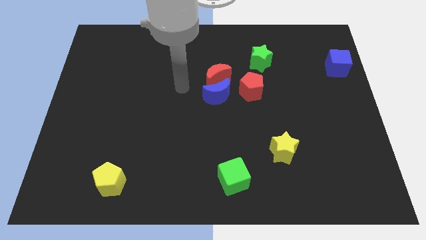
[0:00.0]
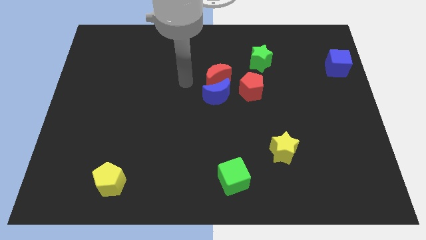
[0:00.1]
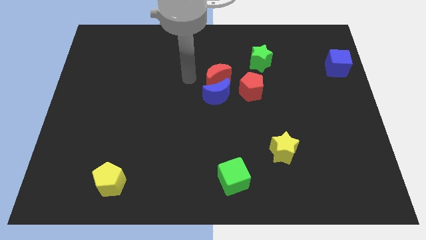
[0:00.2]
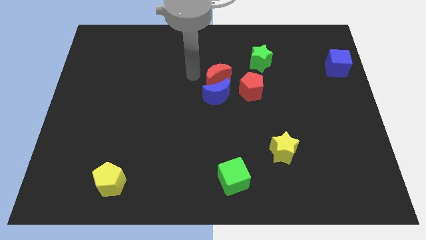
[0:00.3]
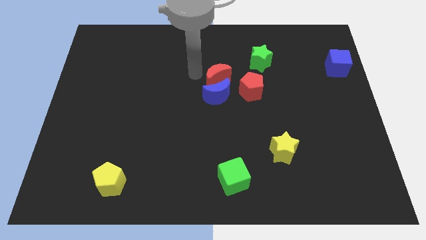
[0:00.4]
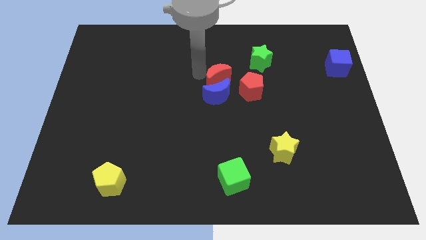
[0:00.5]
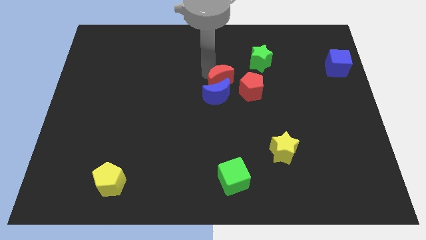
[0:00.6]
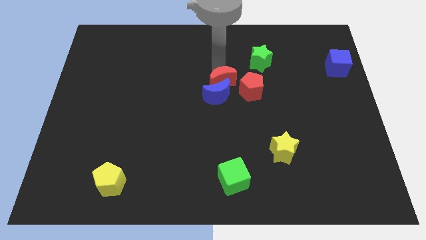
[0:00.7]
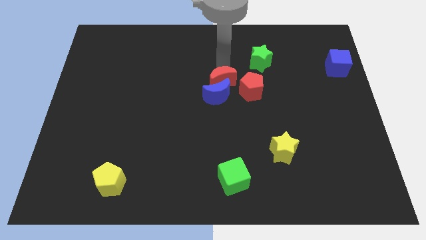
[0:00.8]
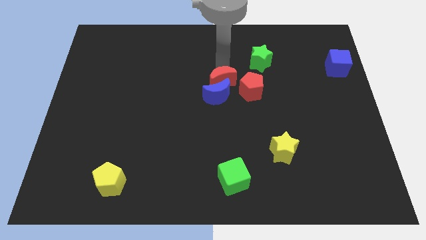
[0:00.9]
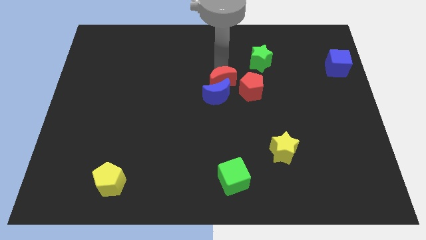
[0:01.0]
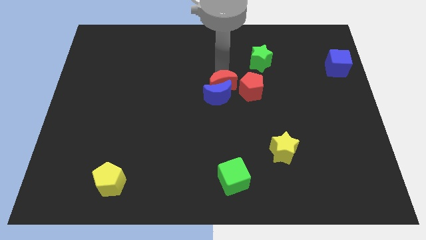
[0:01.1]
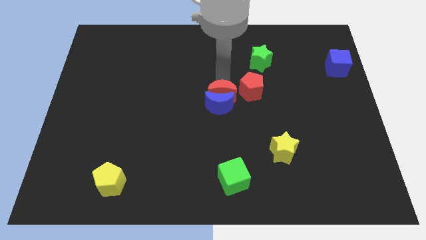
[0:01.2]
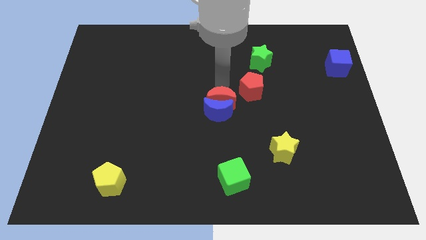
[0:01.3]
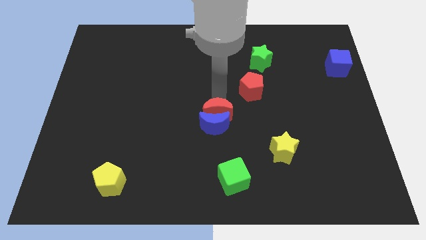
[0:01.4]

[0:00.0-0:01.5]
push the red crescent into the blue crescent

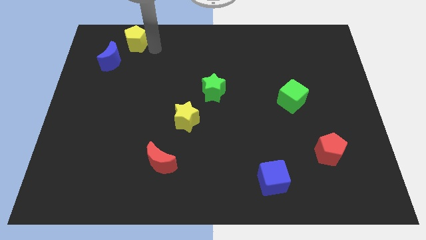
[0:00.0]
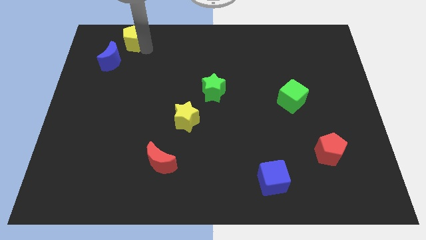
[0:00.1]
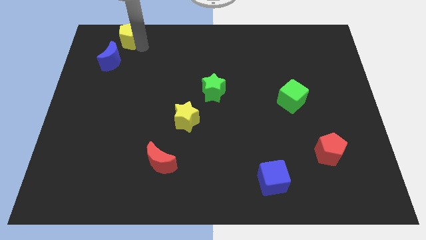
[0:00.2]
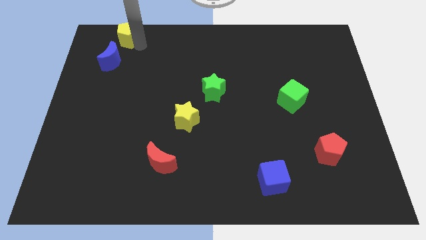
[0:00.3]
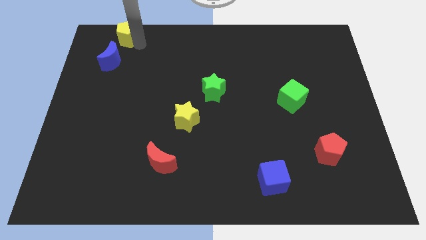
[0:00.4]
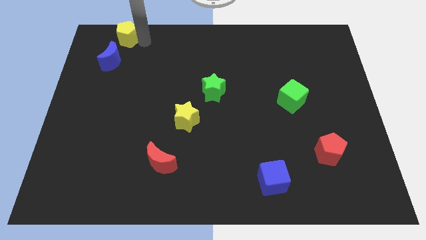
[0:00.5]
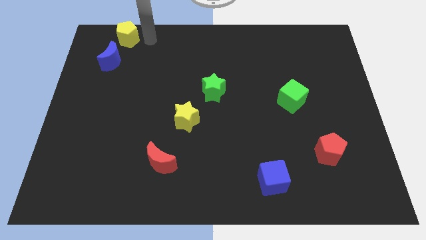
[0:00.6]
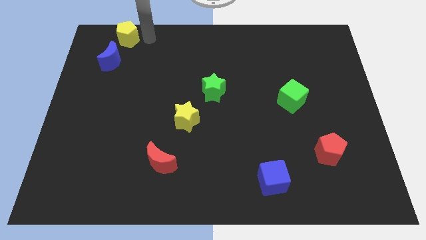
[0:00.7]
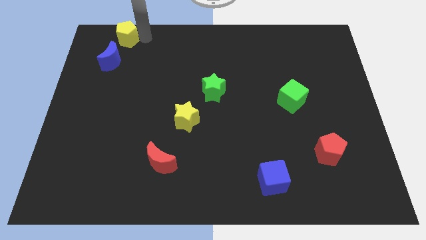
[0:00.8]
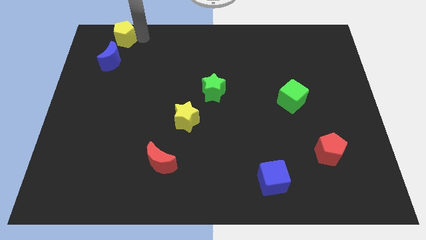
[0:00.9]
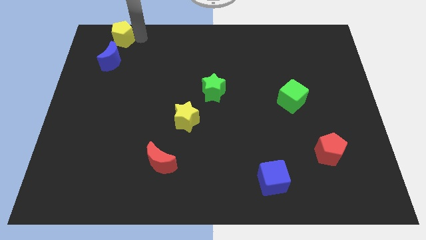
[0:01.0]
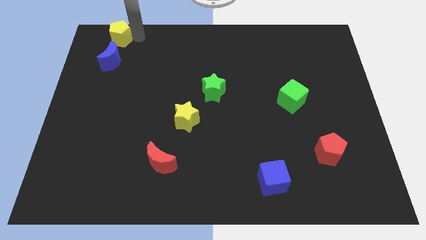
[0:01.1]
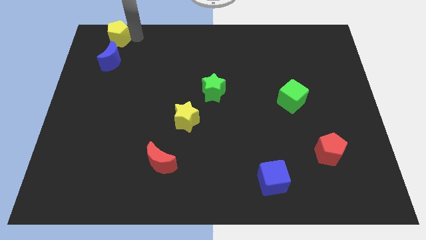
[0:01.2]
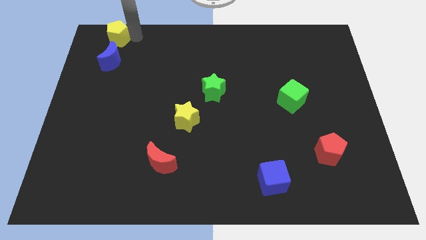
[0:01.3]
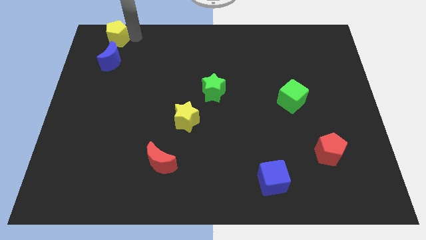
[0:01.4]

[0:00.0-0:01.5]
place the yellow pentagon on top of the blue crescent

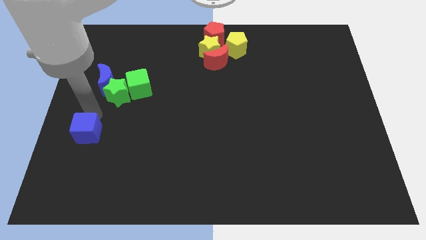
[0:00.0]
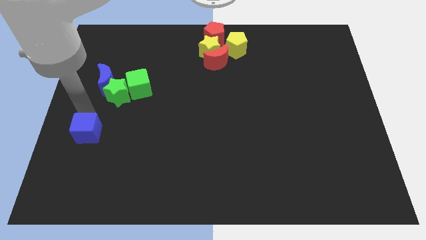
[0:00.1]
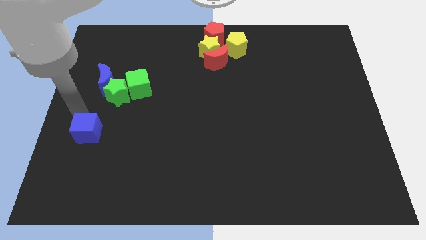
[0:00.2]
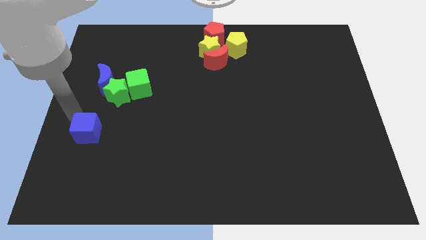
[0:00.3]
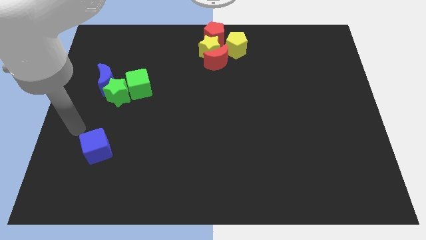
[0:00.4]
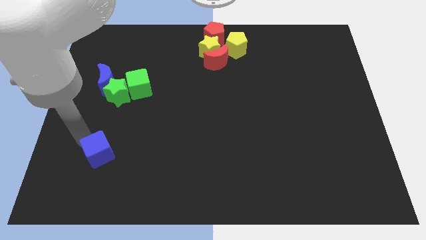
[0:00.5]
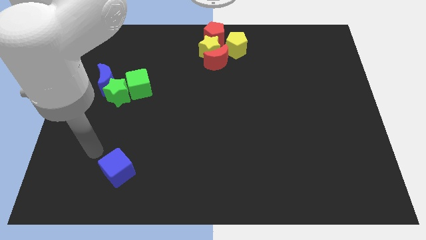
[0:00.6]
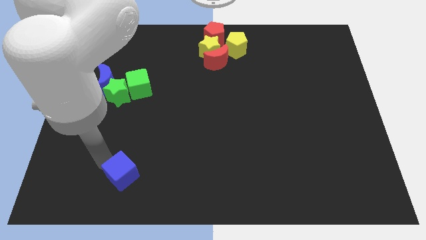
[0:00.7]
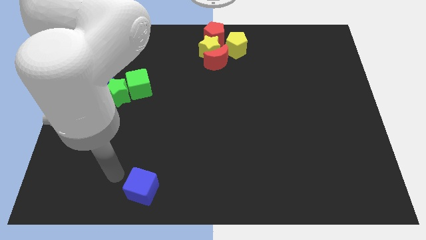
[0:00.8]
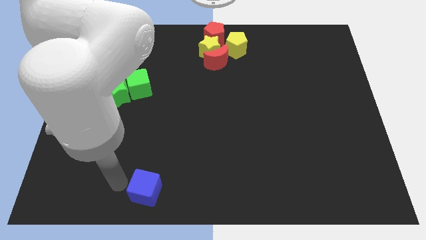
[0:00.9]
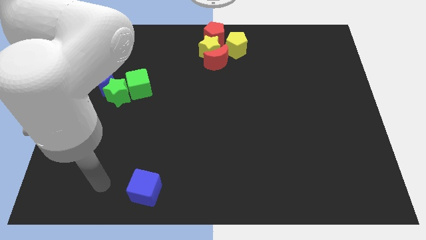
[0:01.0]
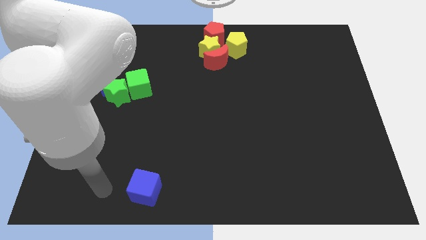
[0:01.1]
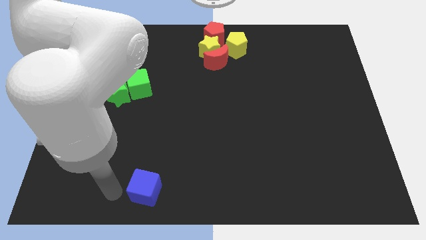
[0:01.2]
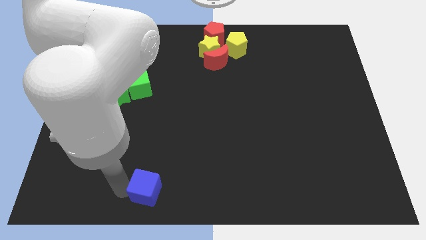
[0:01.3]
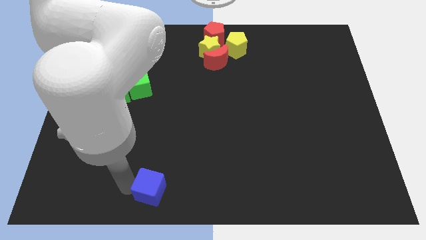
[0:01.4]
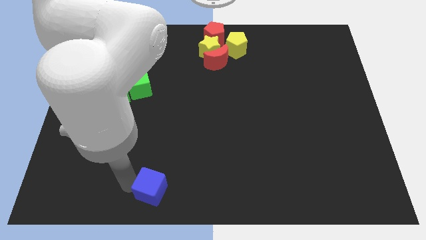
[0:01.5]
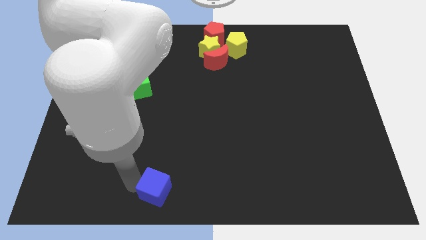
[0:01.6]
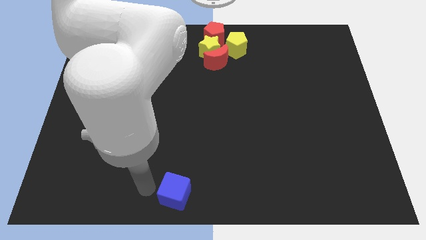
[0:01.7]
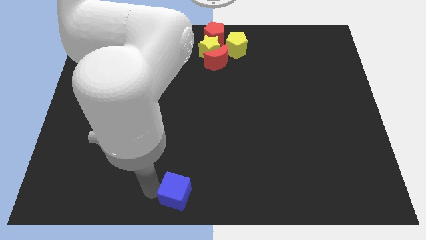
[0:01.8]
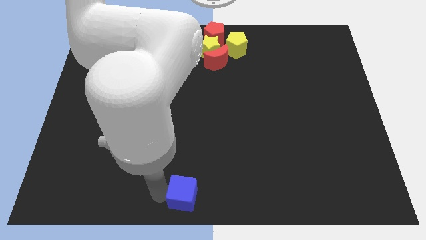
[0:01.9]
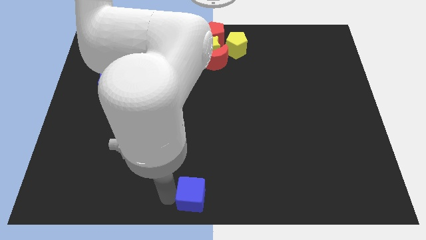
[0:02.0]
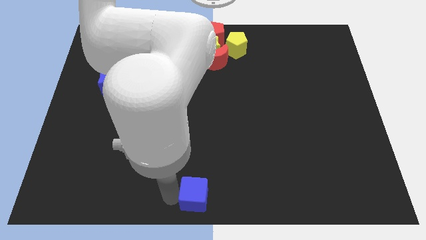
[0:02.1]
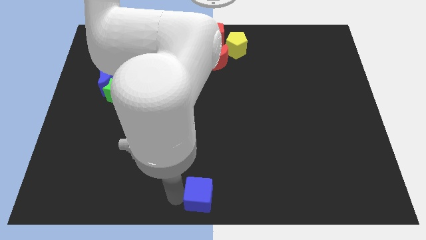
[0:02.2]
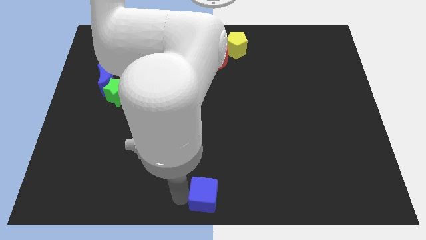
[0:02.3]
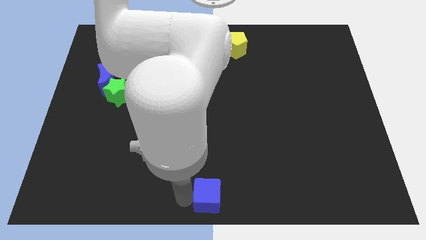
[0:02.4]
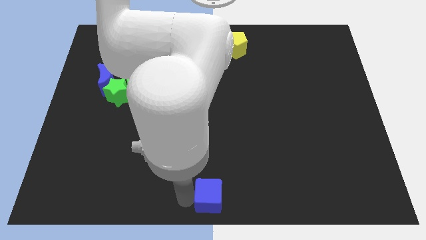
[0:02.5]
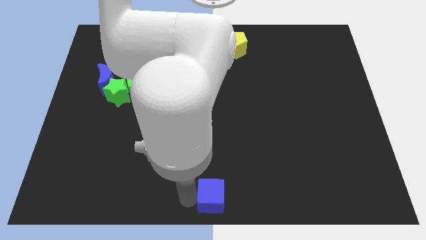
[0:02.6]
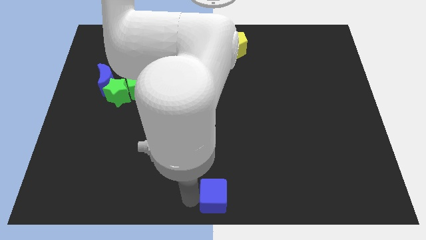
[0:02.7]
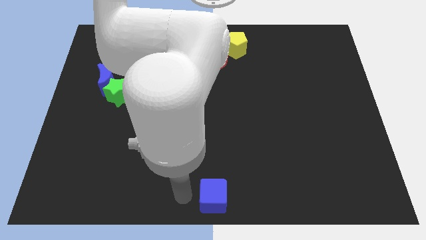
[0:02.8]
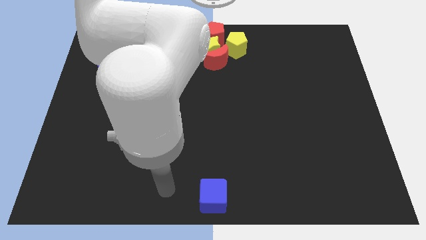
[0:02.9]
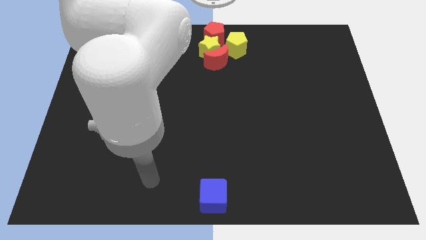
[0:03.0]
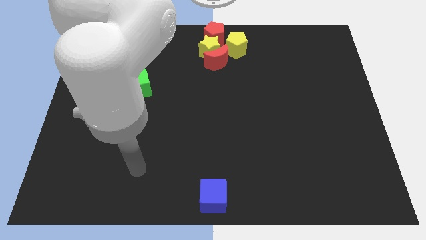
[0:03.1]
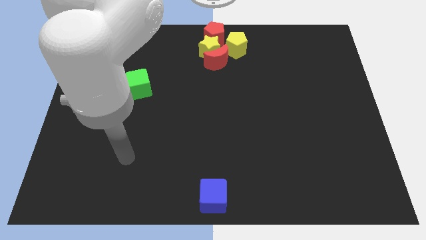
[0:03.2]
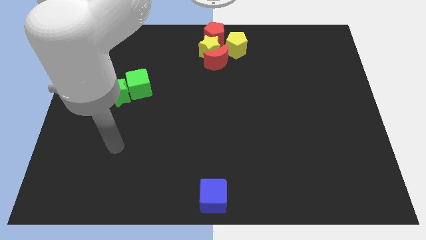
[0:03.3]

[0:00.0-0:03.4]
place the blue cube at the bottom center of the board

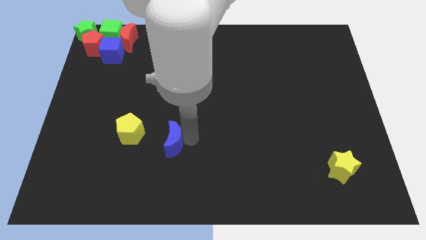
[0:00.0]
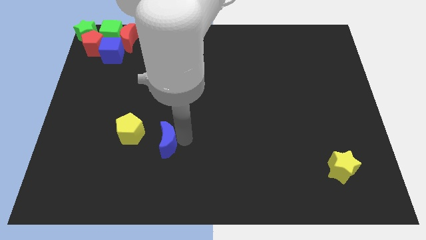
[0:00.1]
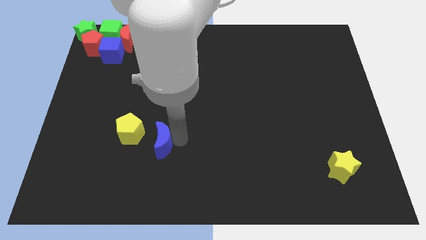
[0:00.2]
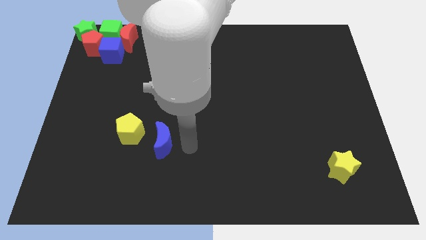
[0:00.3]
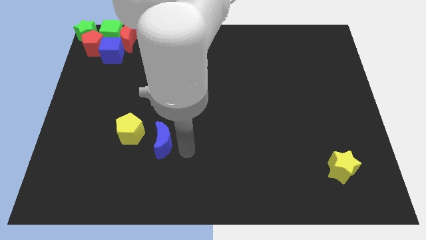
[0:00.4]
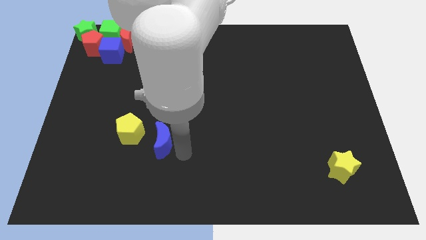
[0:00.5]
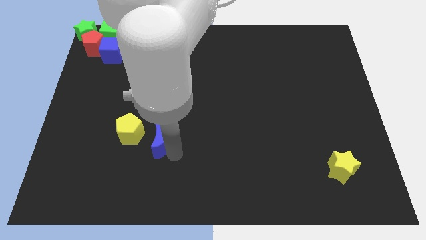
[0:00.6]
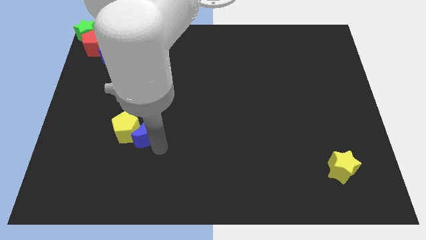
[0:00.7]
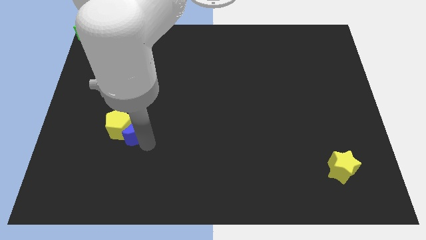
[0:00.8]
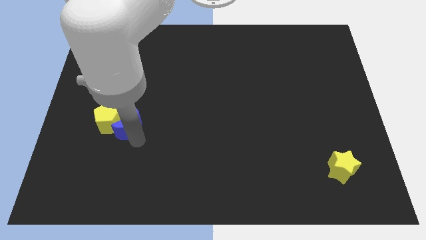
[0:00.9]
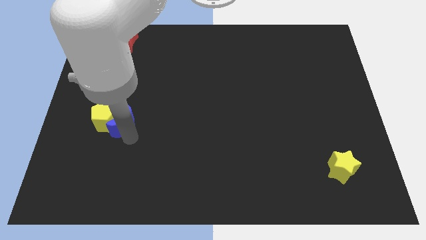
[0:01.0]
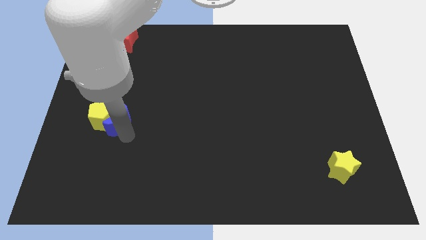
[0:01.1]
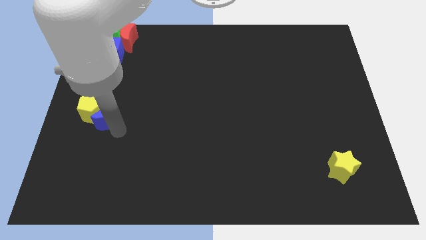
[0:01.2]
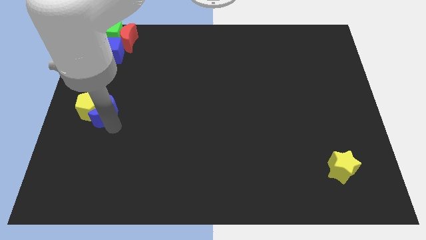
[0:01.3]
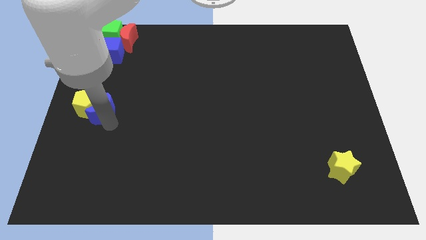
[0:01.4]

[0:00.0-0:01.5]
move blue moon along with yellow pentagon towards center left of the board

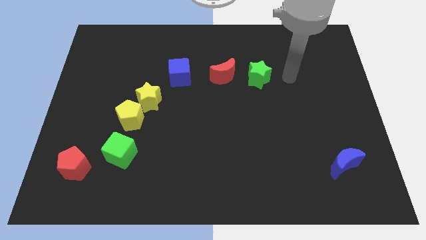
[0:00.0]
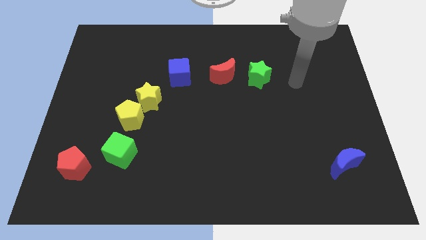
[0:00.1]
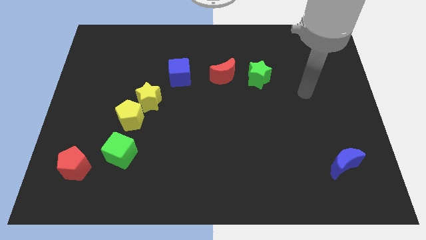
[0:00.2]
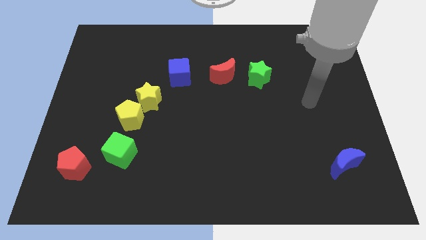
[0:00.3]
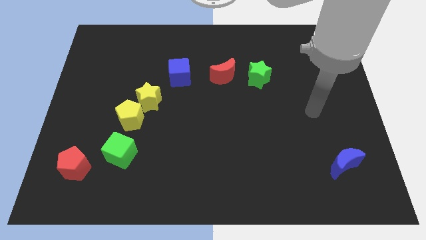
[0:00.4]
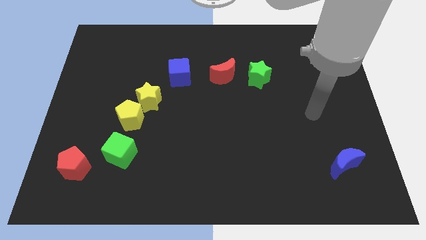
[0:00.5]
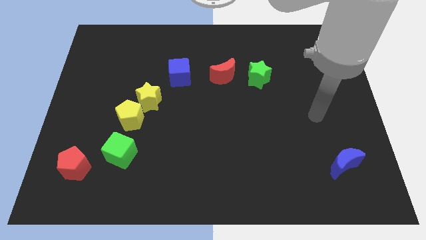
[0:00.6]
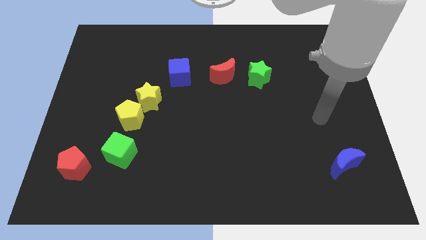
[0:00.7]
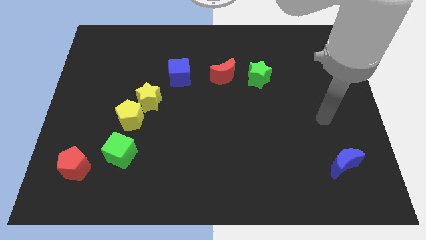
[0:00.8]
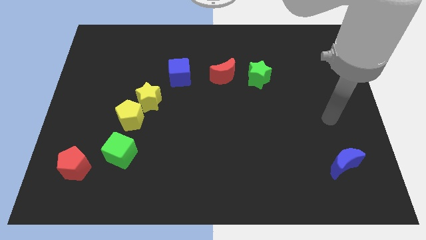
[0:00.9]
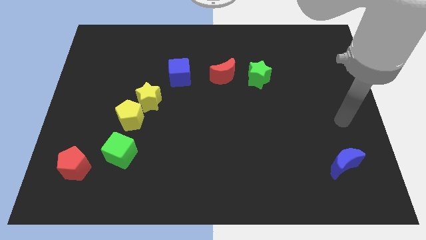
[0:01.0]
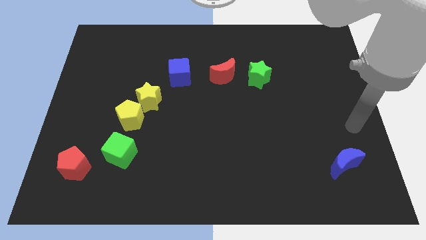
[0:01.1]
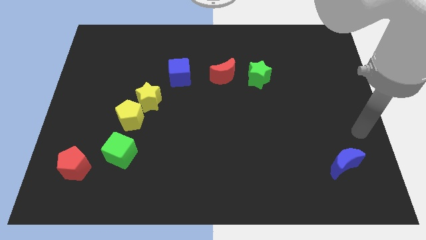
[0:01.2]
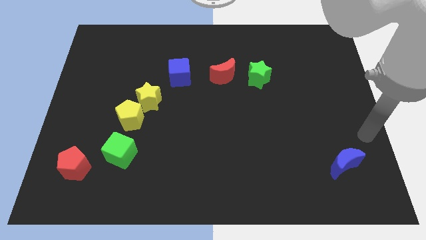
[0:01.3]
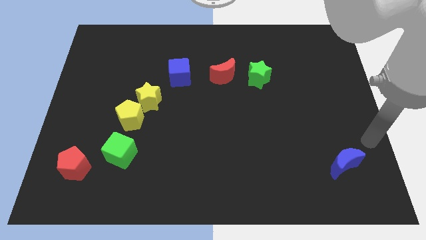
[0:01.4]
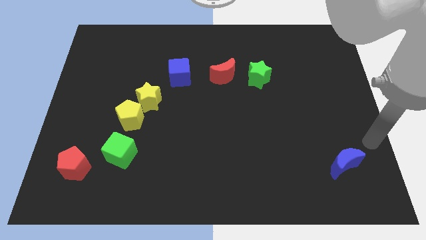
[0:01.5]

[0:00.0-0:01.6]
move your arm away from green star
